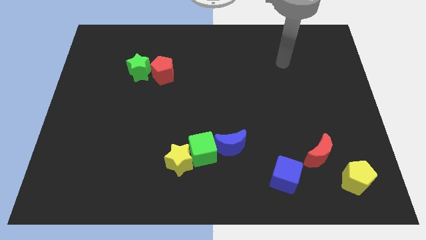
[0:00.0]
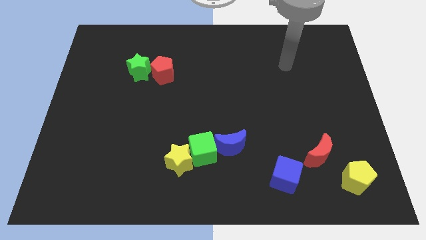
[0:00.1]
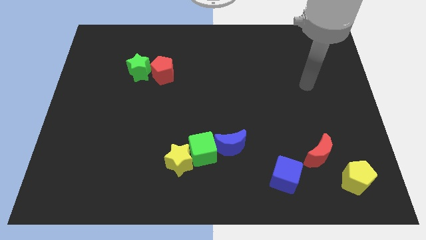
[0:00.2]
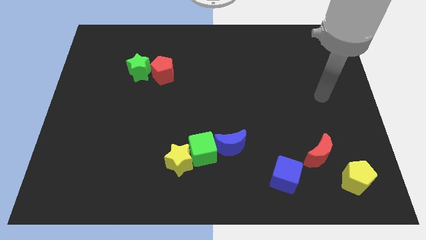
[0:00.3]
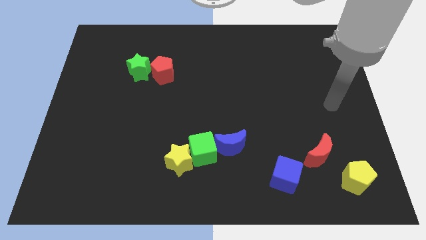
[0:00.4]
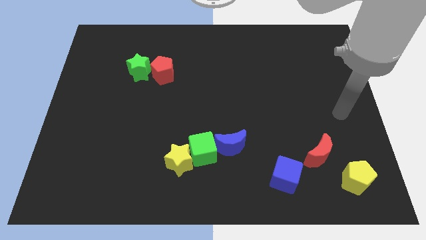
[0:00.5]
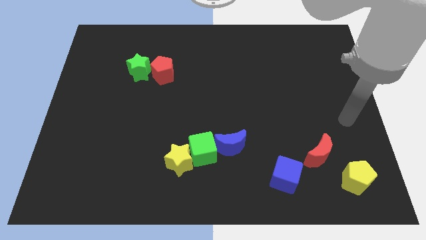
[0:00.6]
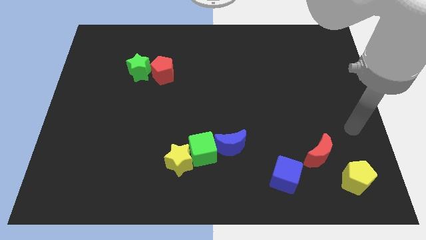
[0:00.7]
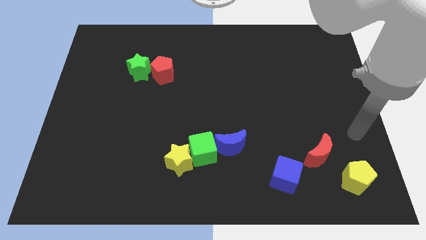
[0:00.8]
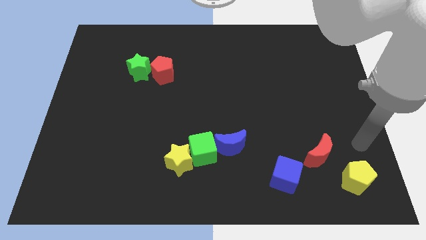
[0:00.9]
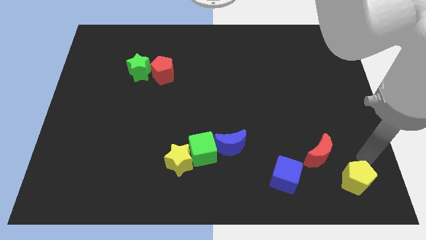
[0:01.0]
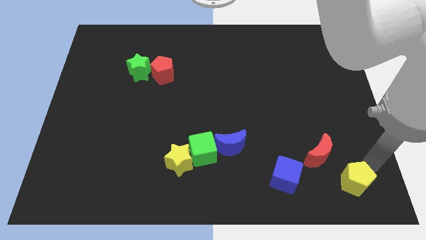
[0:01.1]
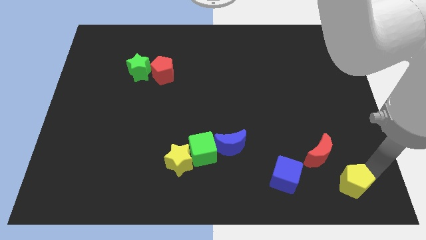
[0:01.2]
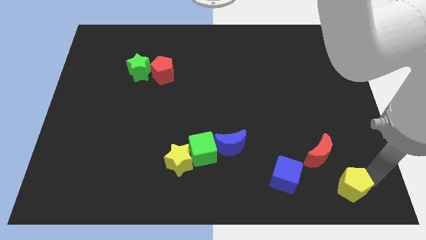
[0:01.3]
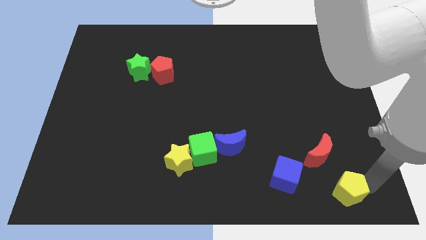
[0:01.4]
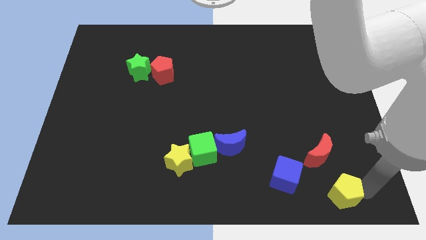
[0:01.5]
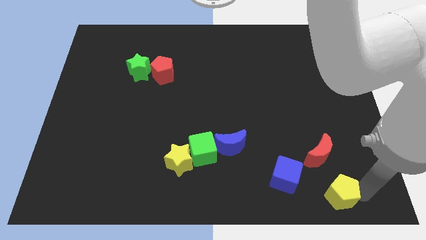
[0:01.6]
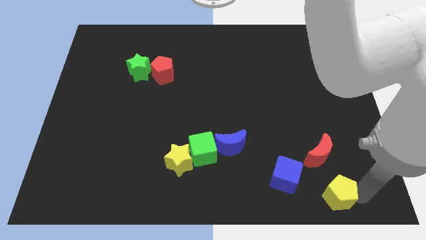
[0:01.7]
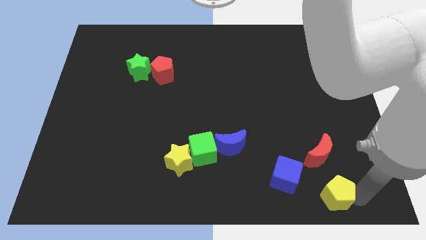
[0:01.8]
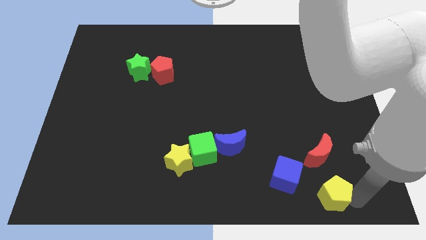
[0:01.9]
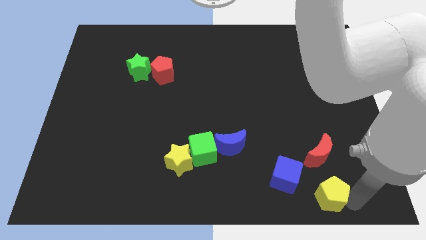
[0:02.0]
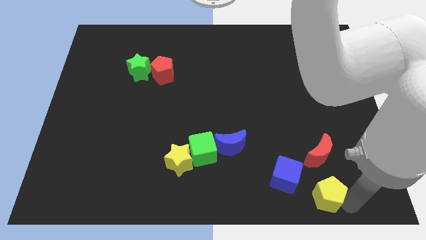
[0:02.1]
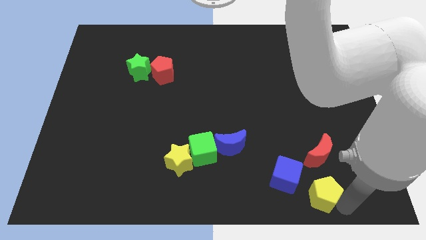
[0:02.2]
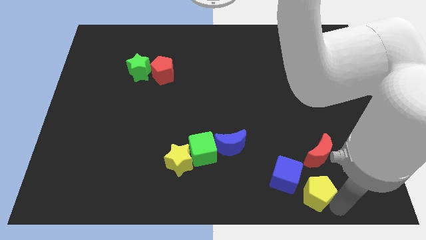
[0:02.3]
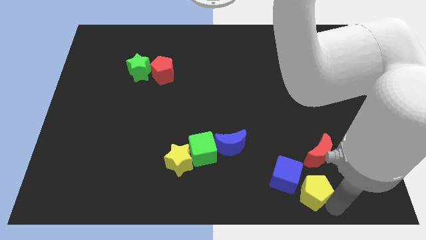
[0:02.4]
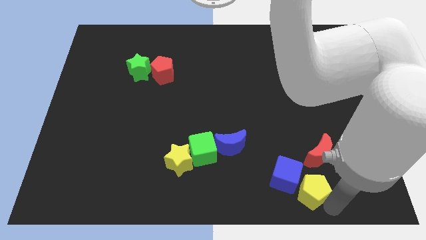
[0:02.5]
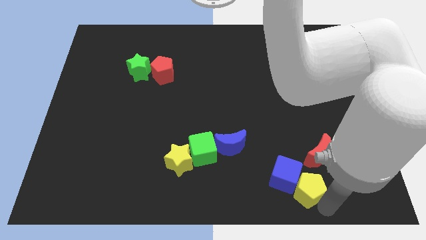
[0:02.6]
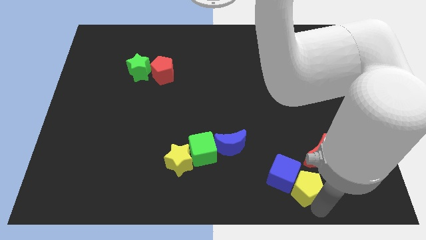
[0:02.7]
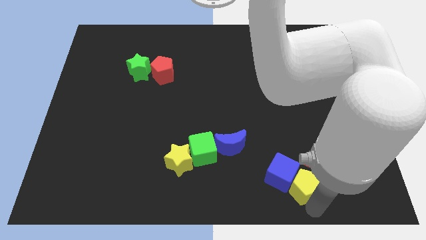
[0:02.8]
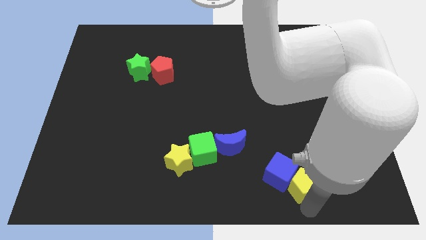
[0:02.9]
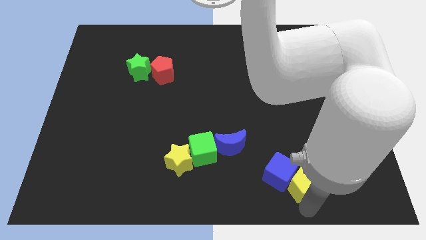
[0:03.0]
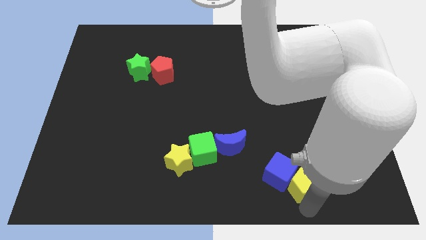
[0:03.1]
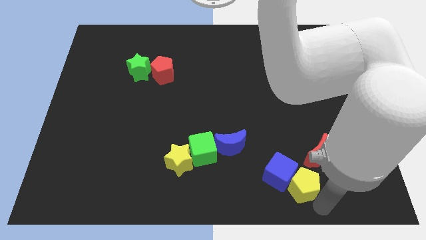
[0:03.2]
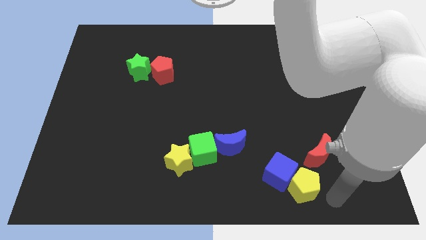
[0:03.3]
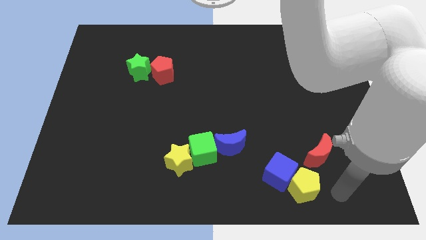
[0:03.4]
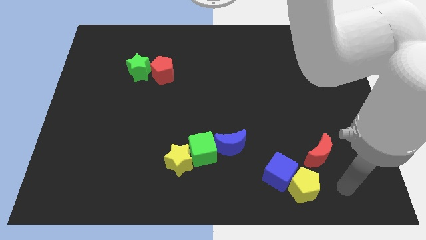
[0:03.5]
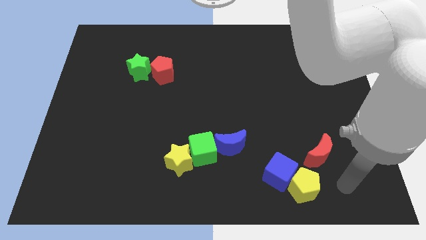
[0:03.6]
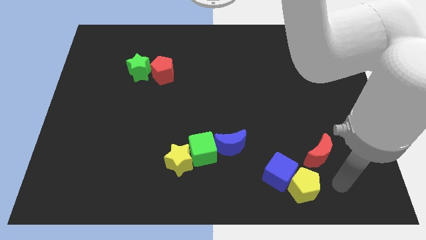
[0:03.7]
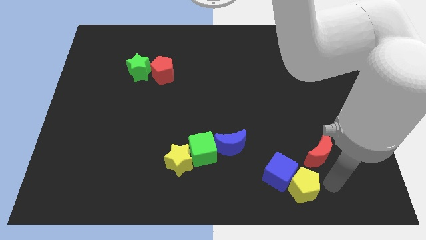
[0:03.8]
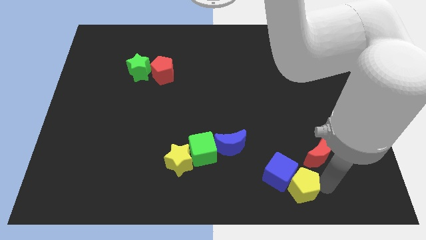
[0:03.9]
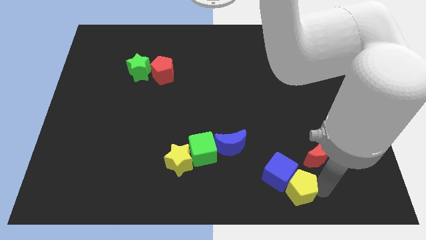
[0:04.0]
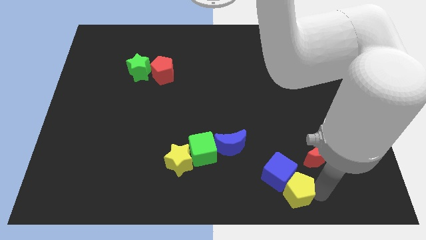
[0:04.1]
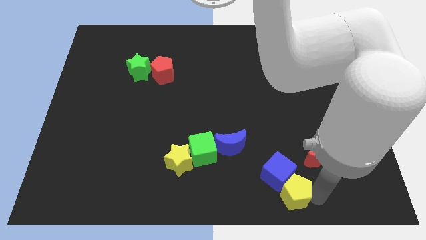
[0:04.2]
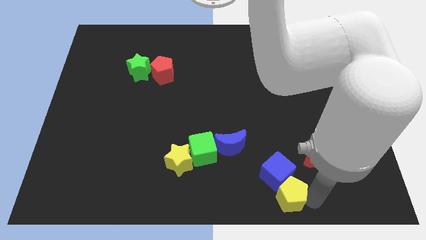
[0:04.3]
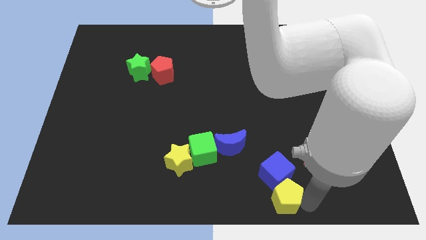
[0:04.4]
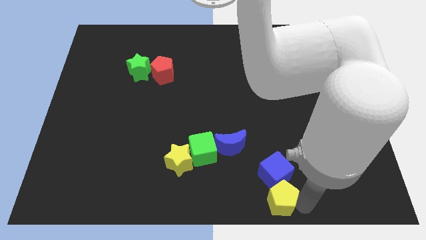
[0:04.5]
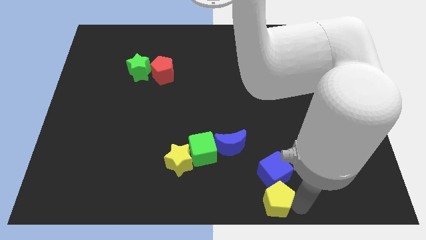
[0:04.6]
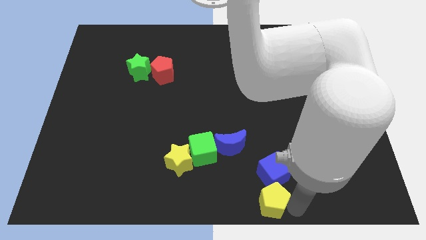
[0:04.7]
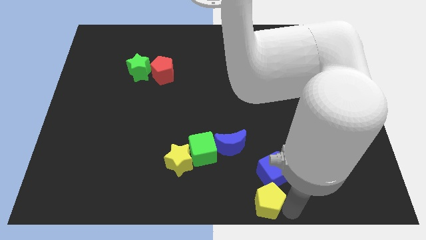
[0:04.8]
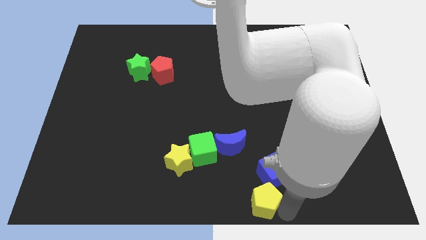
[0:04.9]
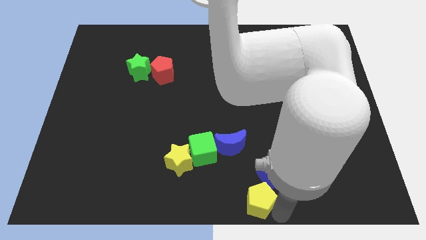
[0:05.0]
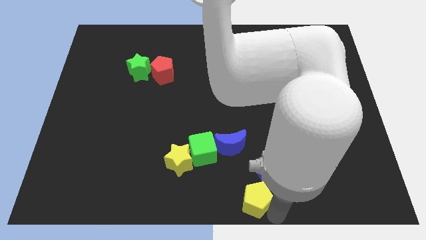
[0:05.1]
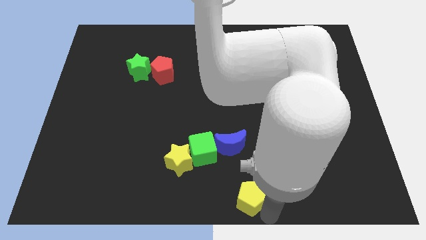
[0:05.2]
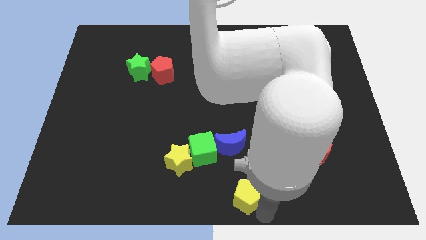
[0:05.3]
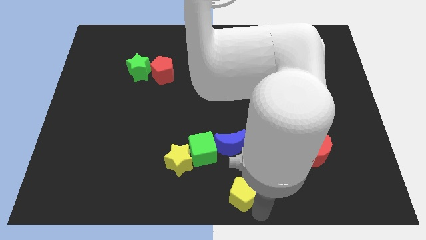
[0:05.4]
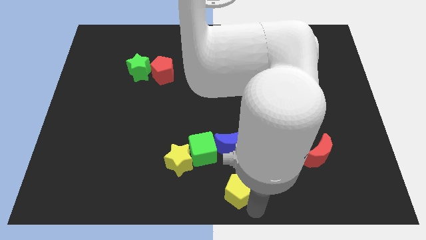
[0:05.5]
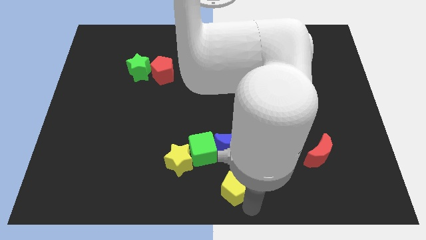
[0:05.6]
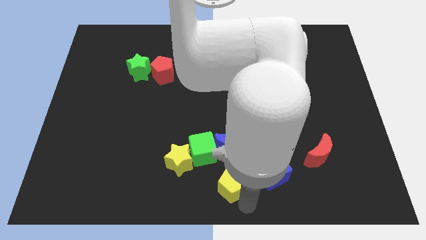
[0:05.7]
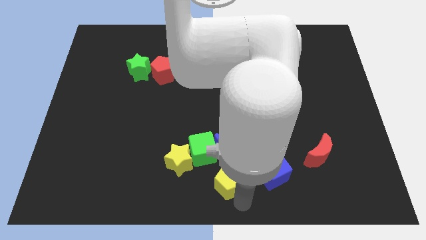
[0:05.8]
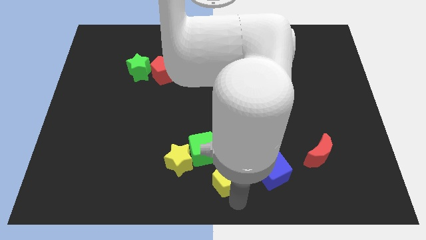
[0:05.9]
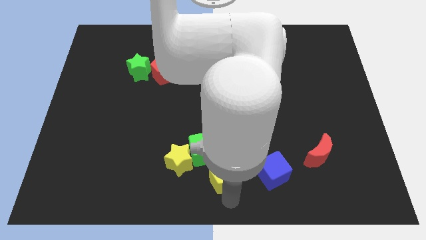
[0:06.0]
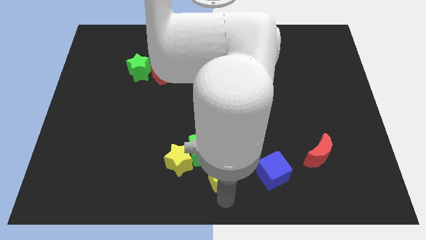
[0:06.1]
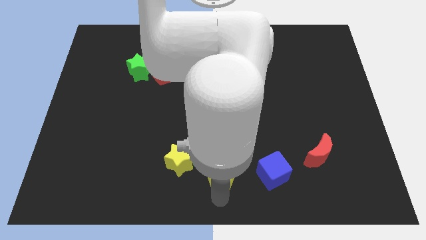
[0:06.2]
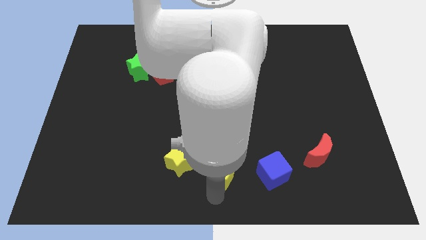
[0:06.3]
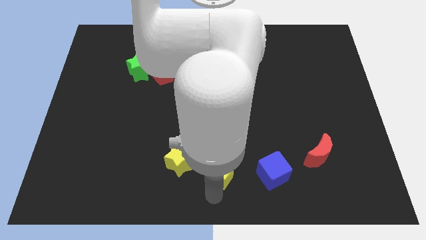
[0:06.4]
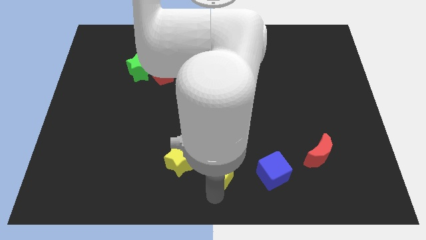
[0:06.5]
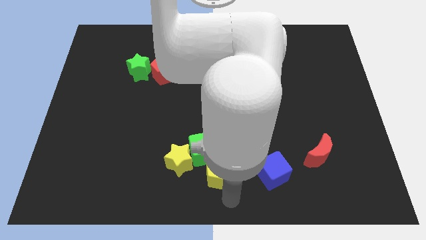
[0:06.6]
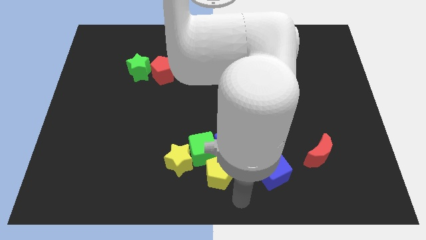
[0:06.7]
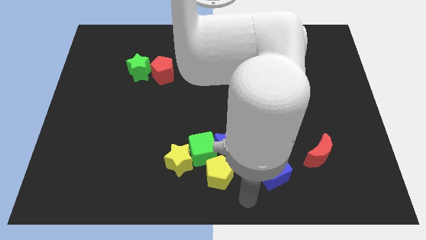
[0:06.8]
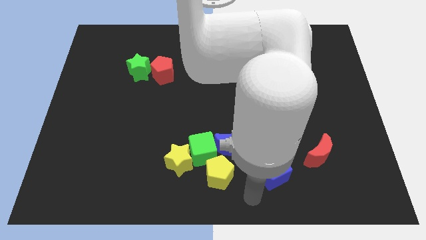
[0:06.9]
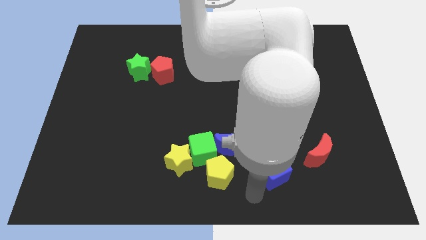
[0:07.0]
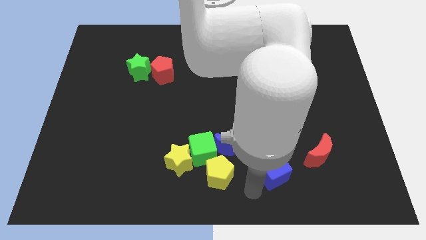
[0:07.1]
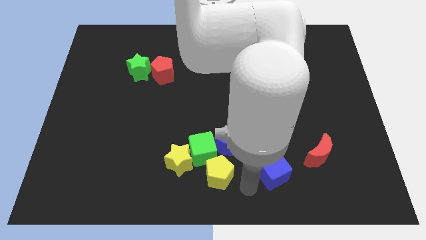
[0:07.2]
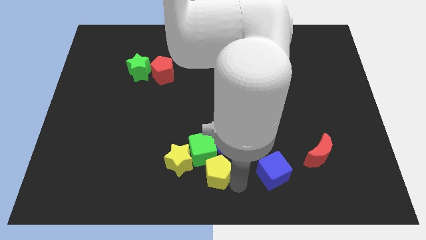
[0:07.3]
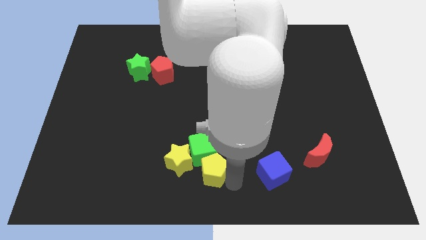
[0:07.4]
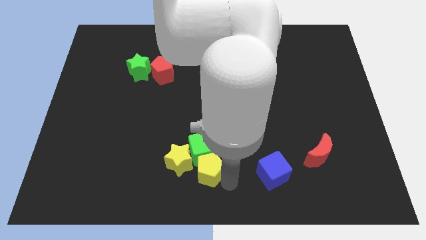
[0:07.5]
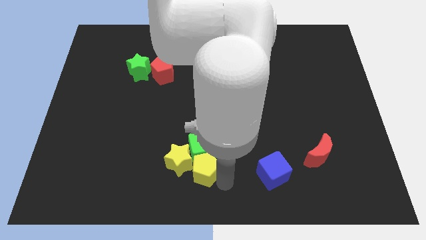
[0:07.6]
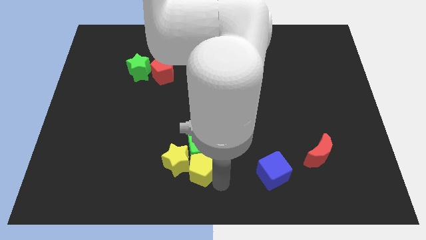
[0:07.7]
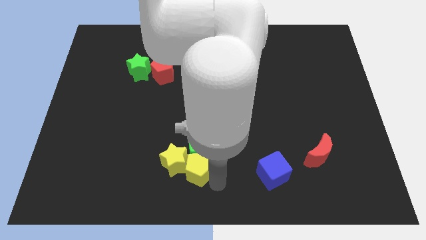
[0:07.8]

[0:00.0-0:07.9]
push the yellow pentagon close to the yellow star

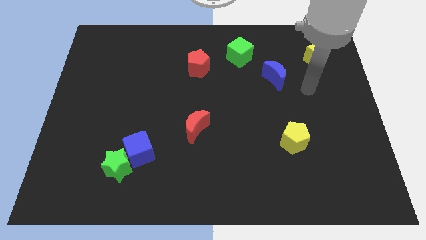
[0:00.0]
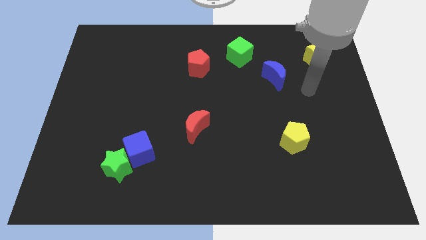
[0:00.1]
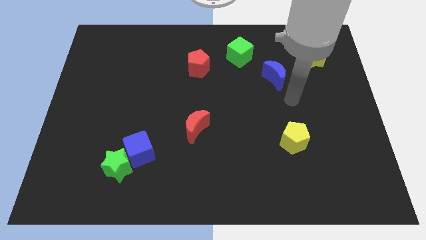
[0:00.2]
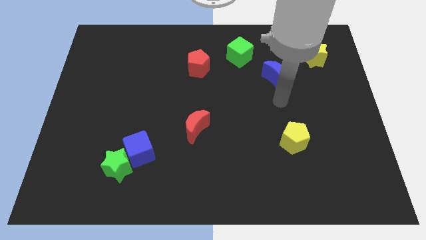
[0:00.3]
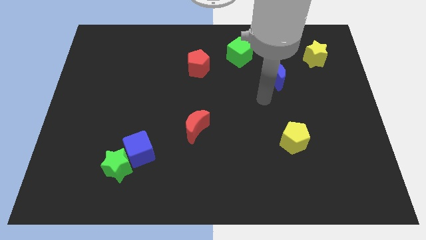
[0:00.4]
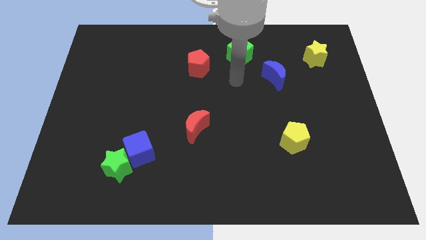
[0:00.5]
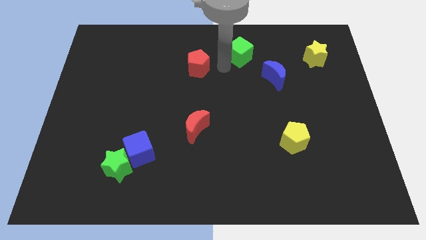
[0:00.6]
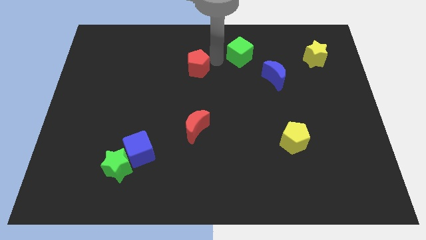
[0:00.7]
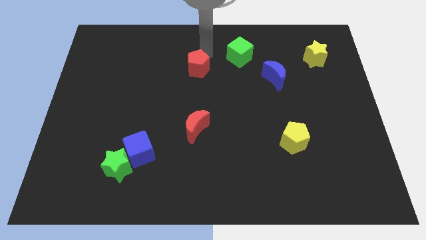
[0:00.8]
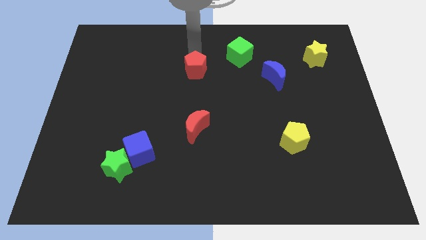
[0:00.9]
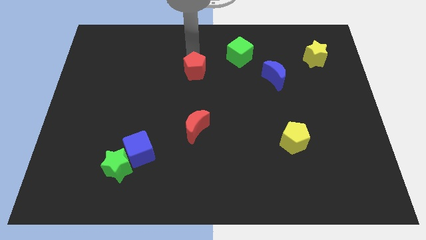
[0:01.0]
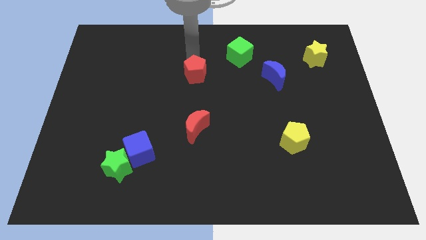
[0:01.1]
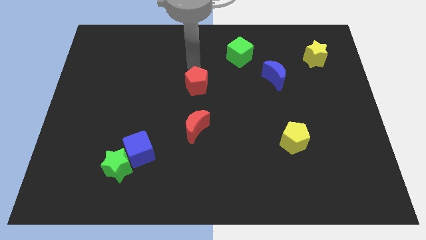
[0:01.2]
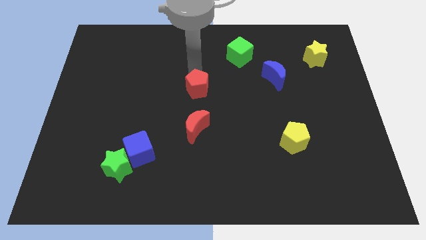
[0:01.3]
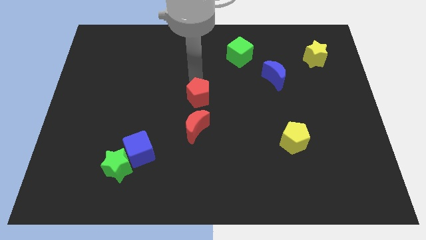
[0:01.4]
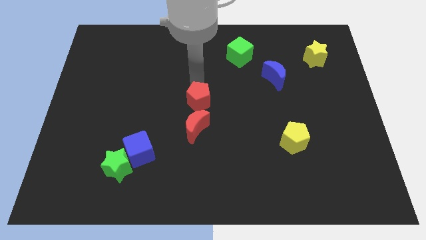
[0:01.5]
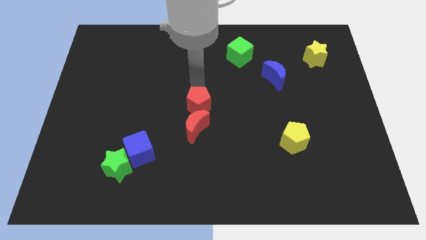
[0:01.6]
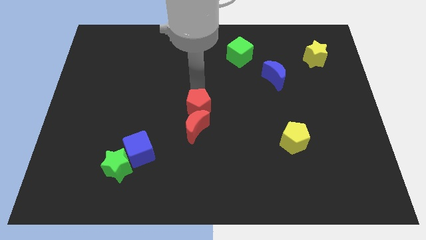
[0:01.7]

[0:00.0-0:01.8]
put the red pentagon close to the red moon
